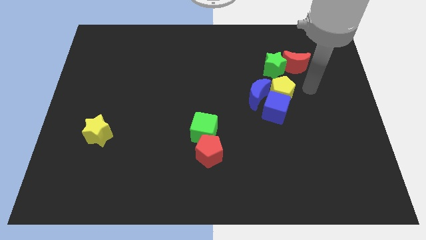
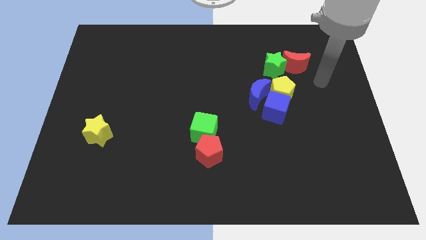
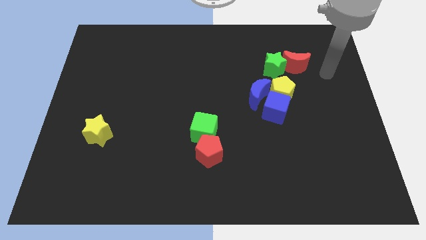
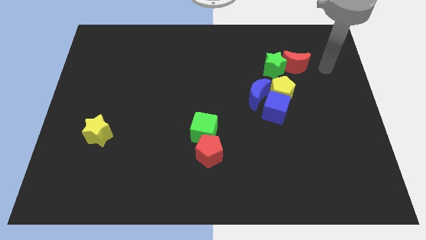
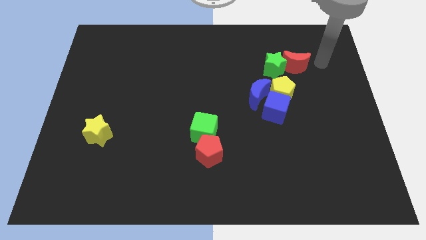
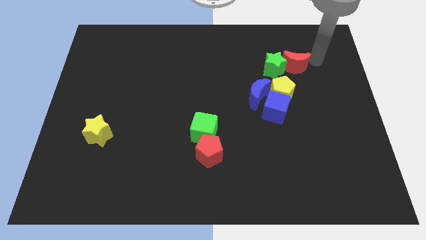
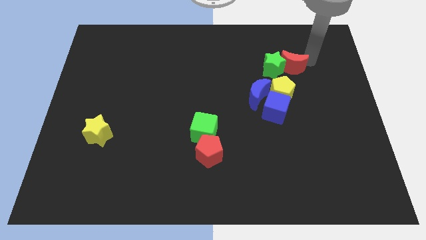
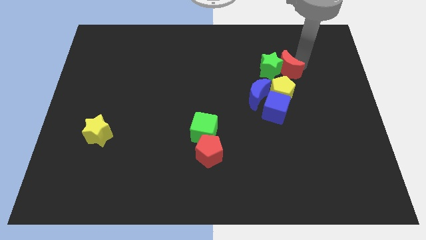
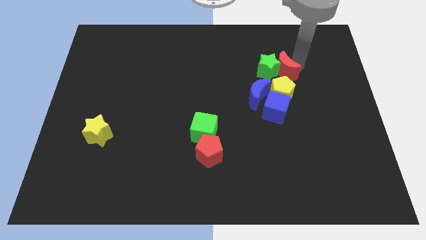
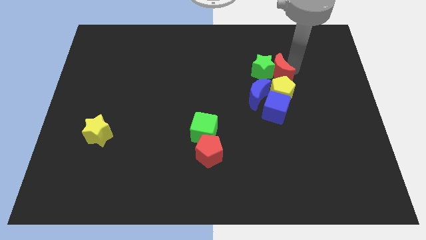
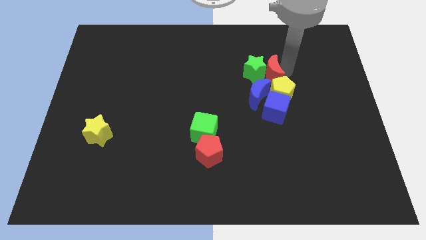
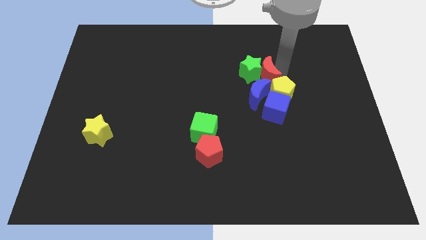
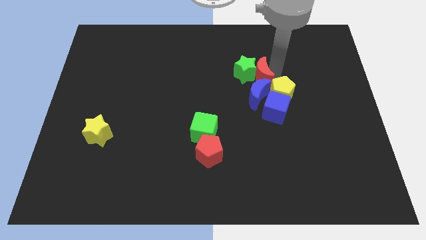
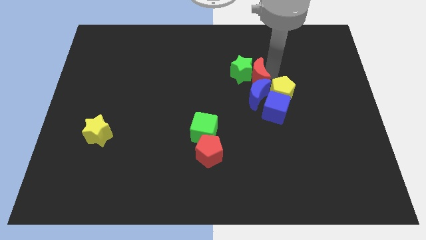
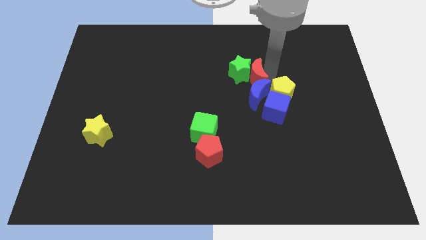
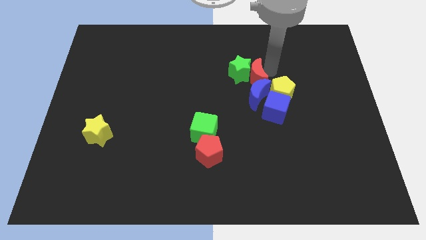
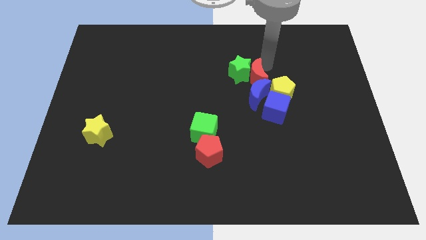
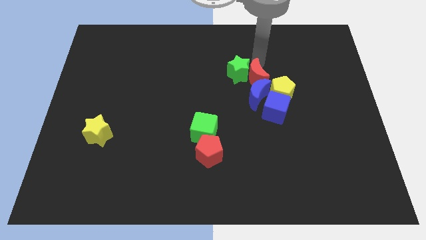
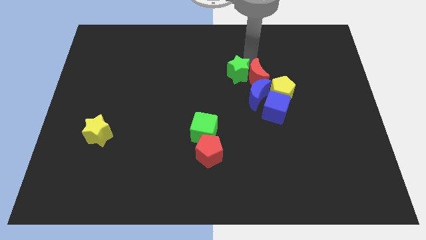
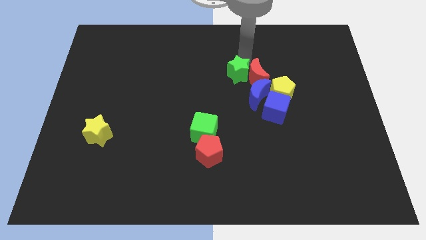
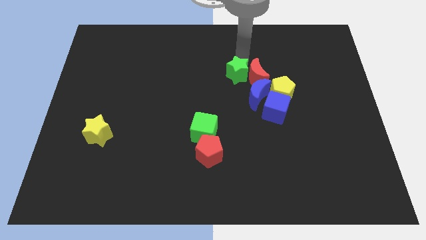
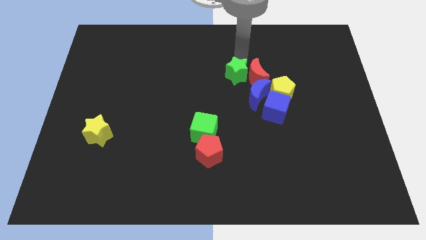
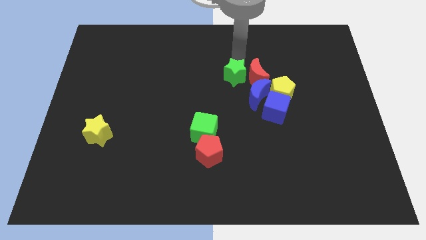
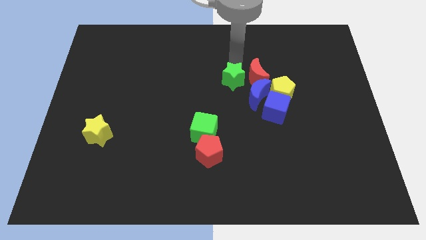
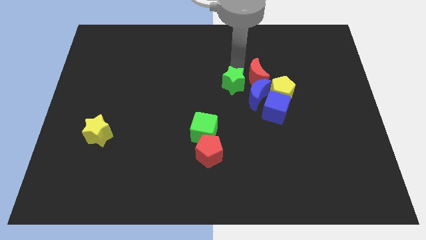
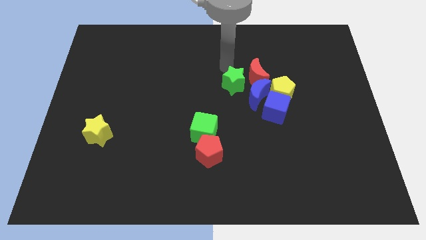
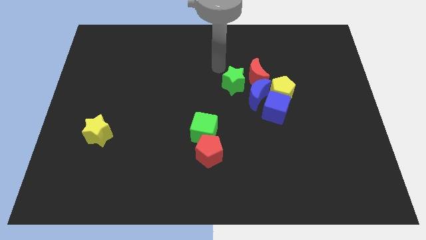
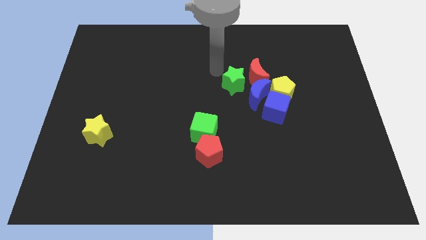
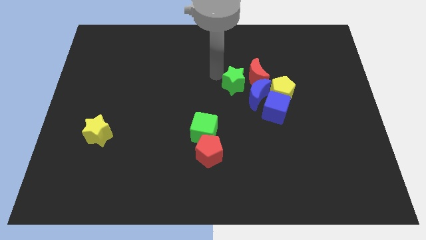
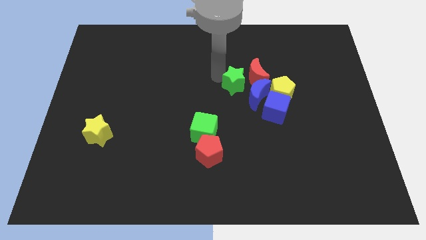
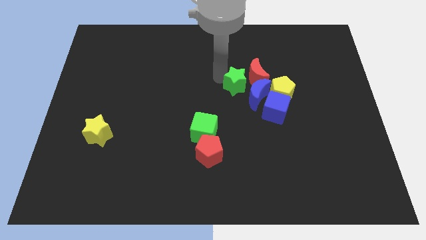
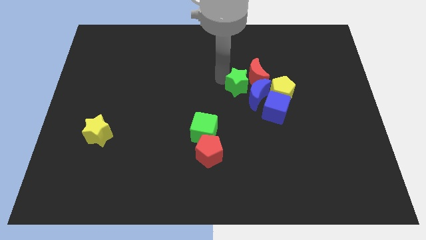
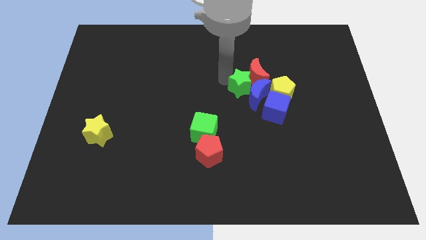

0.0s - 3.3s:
push the red moon into the green star

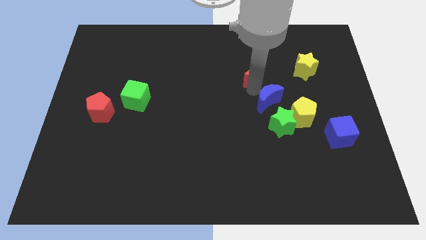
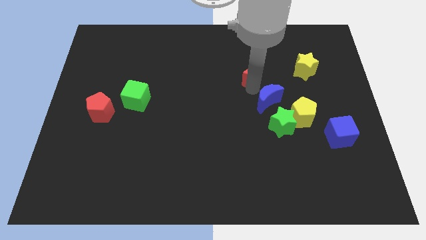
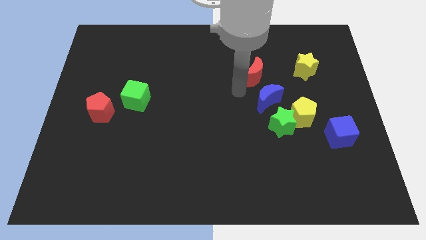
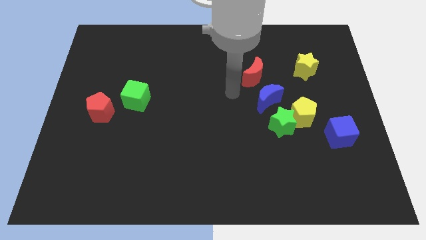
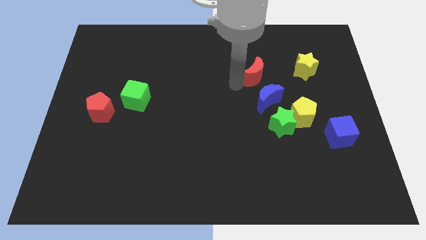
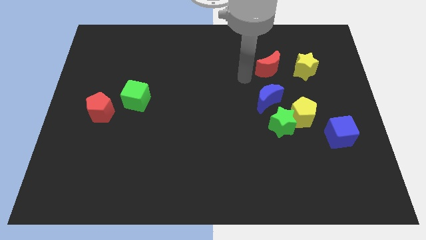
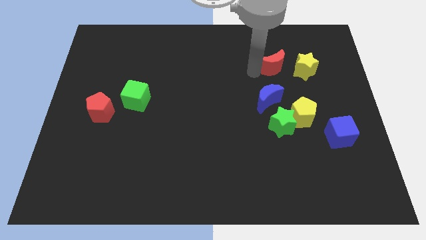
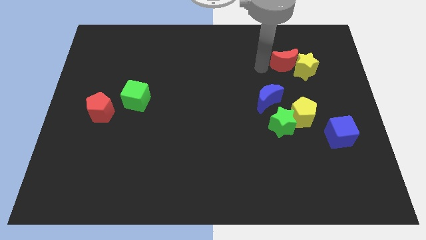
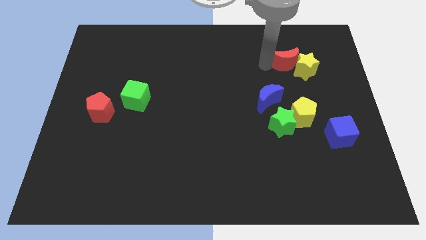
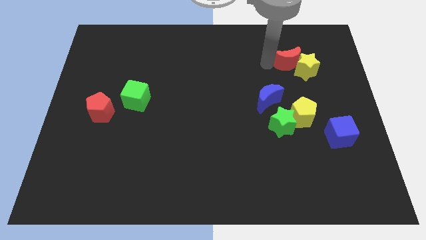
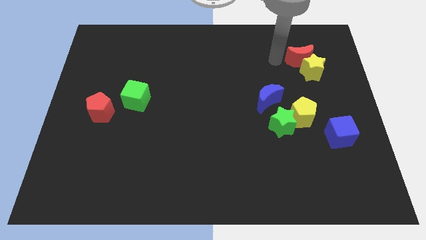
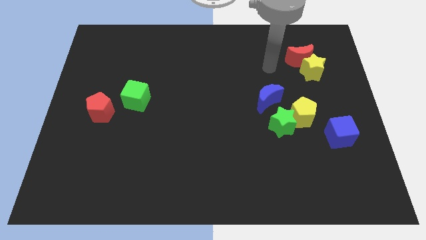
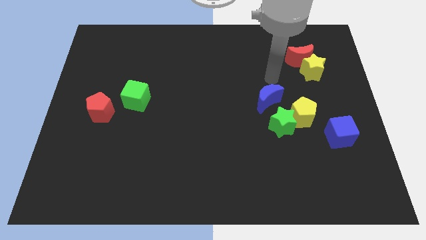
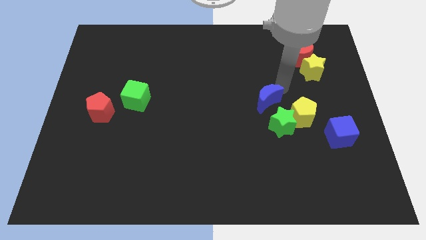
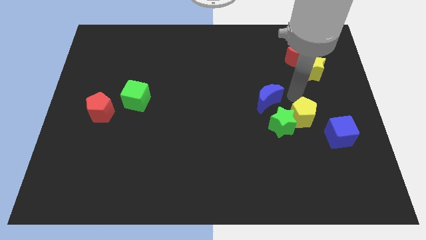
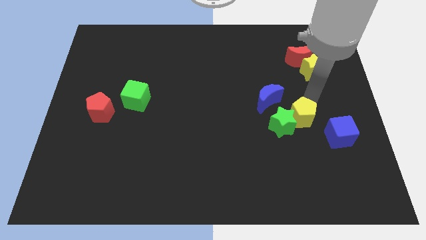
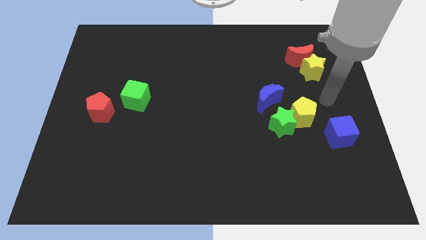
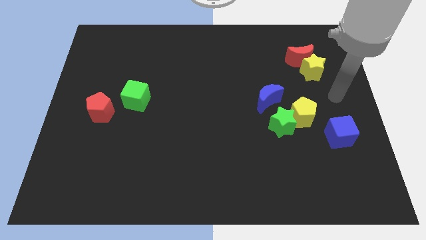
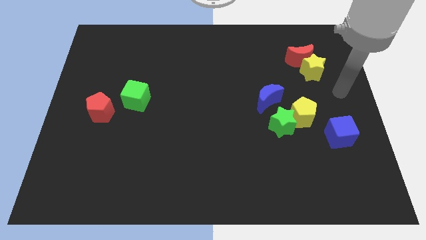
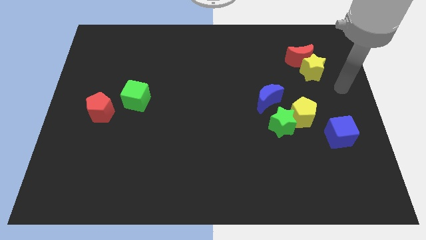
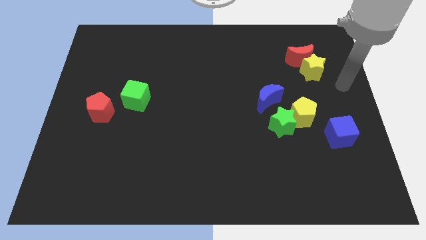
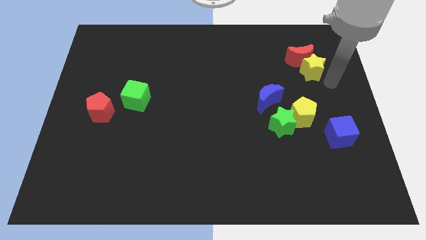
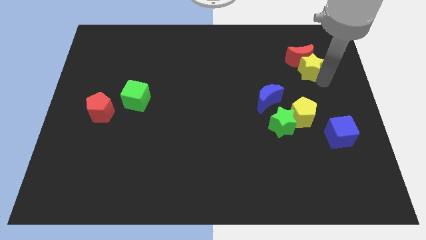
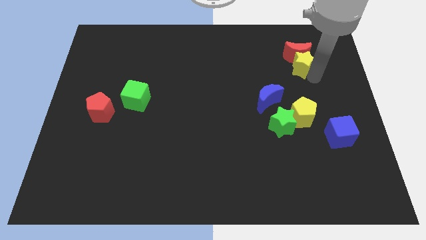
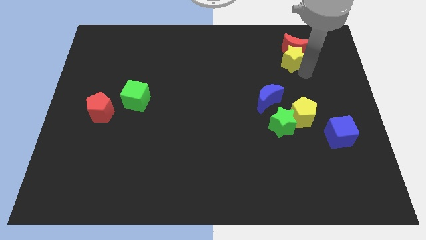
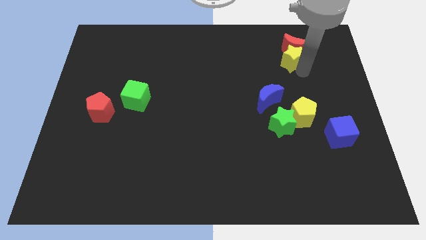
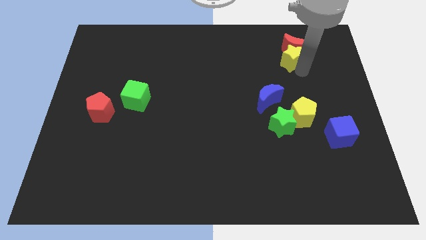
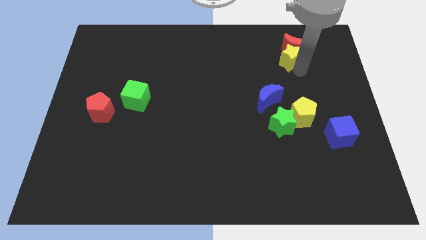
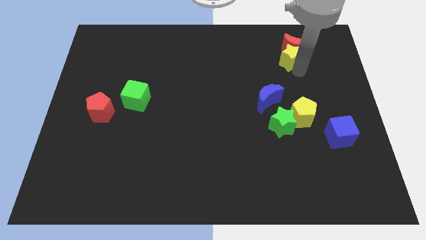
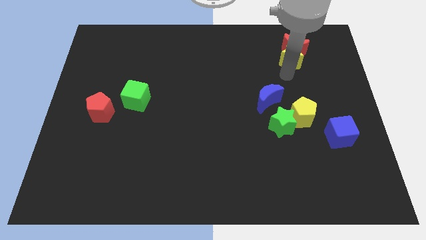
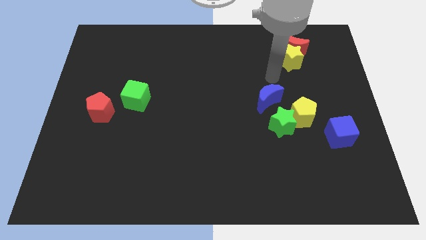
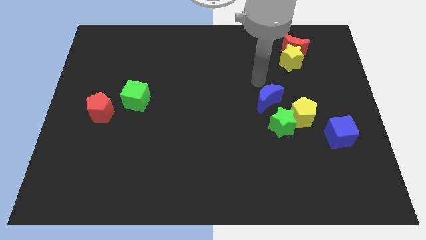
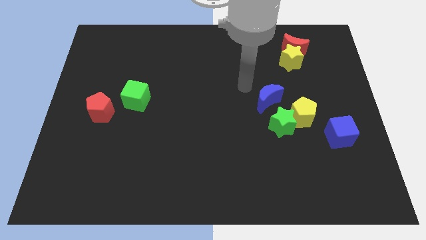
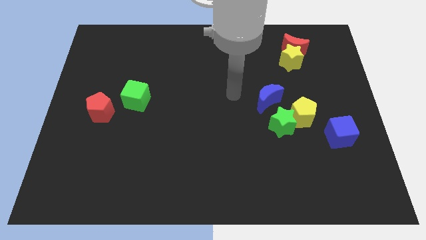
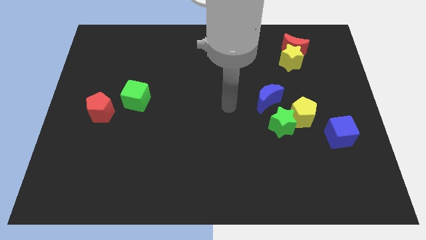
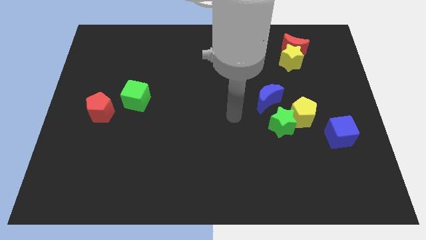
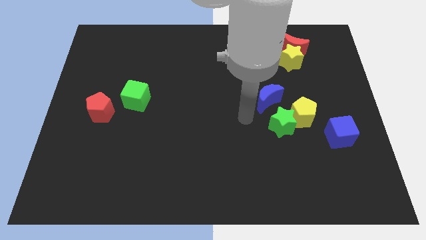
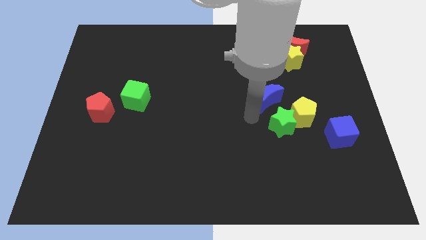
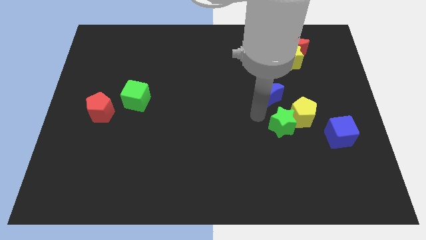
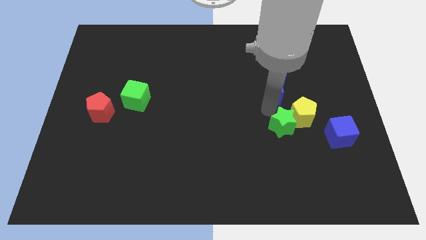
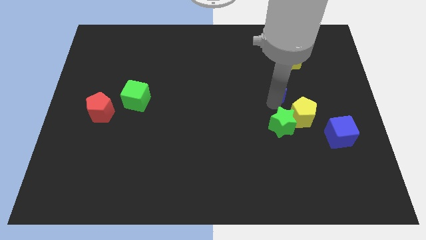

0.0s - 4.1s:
place the red moon close to yellow star

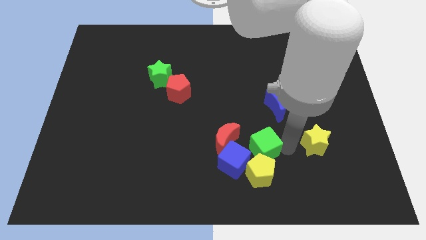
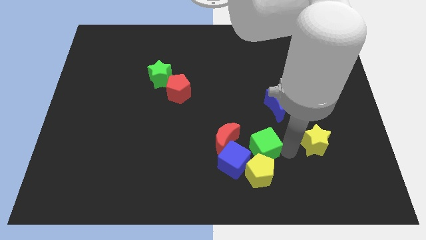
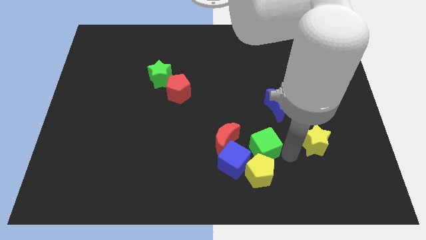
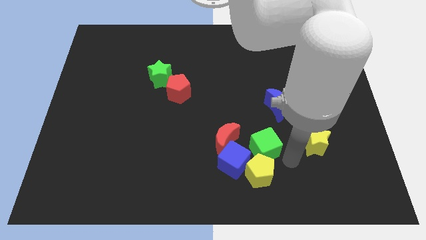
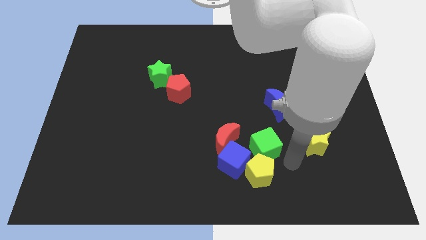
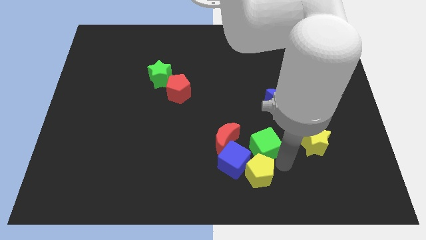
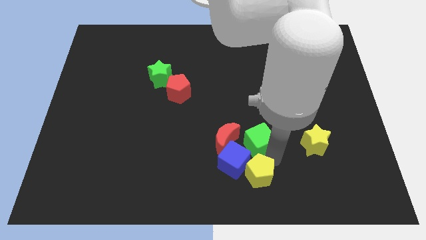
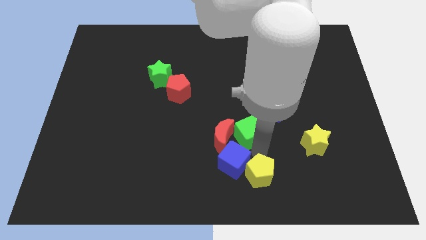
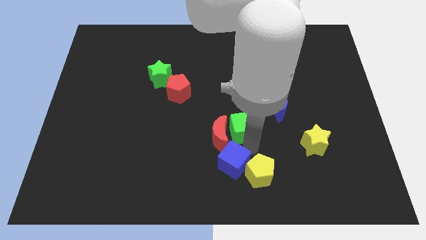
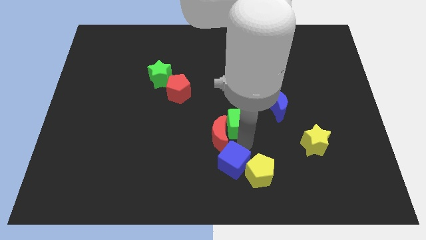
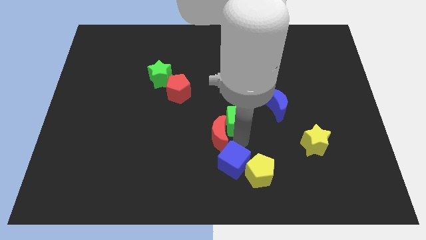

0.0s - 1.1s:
push the green cube close to the red crescent

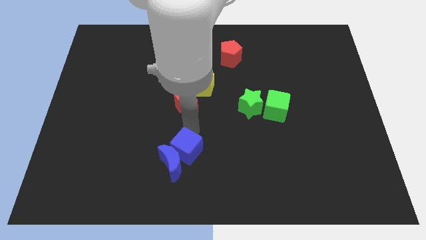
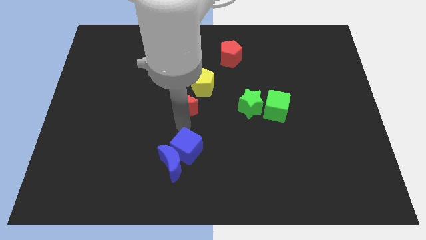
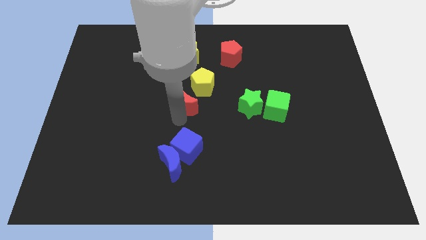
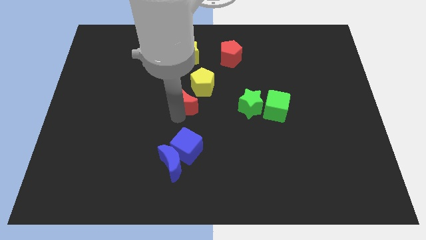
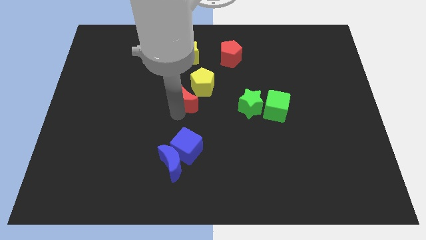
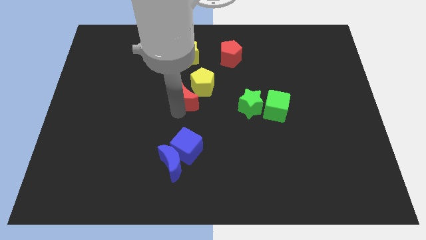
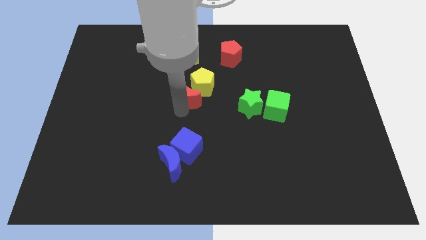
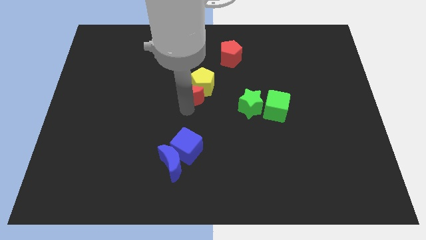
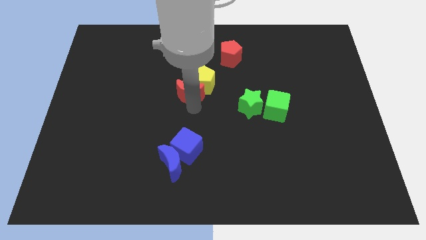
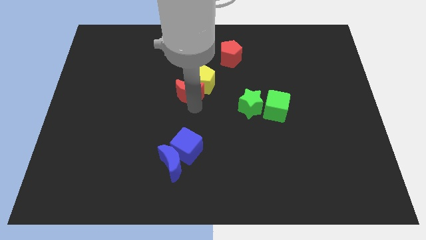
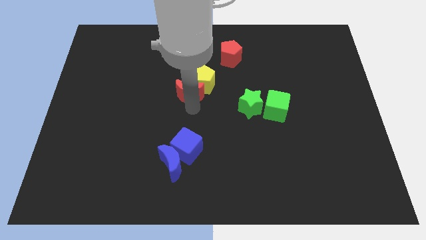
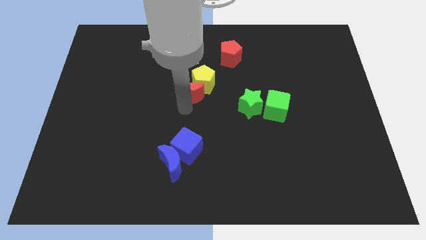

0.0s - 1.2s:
push the red moon towards the yellow pentagon
